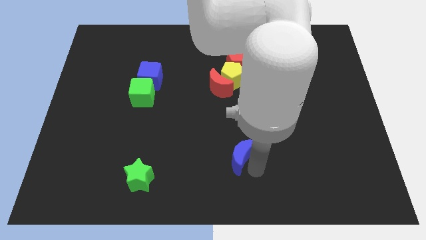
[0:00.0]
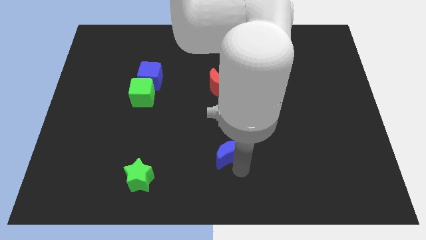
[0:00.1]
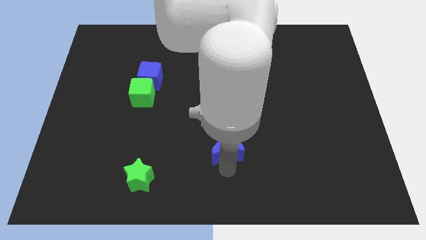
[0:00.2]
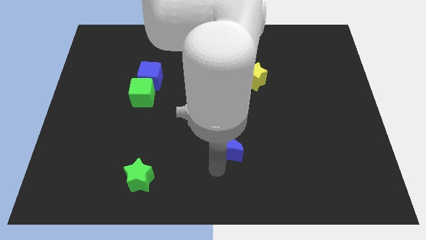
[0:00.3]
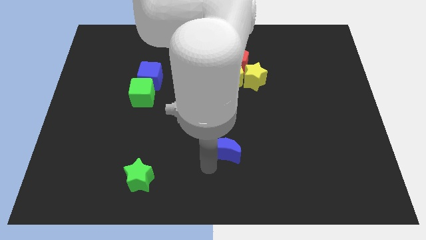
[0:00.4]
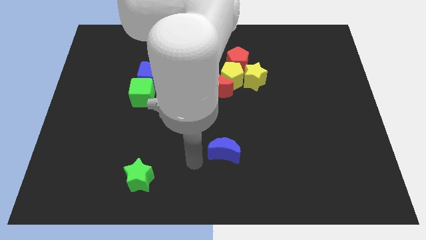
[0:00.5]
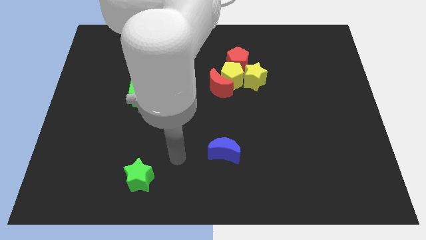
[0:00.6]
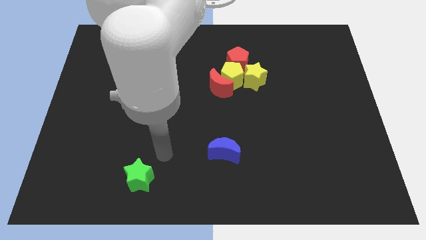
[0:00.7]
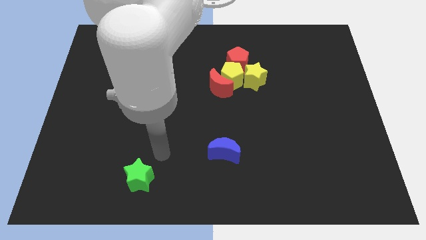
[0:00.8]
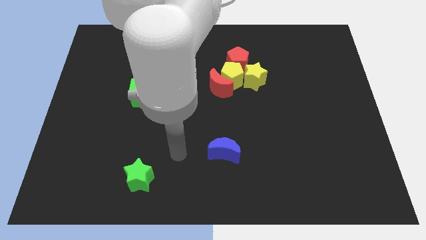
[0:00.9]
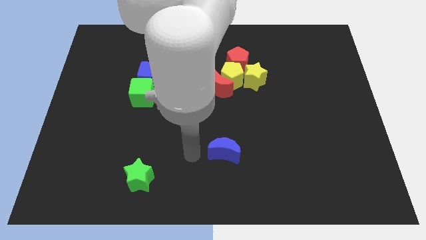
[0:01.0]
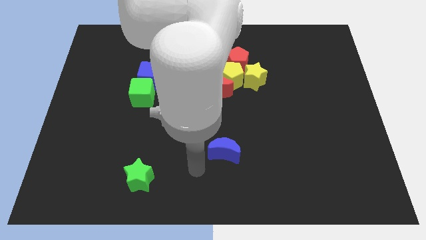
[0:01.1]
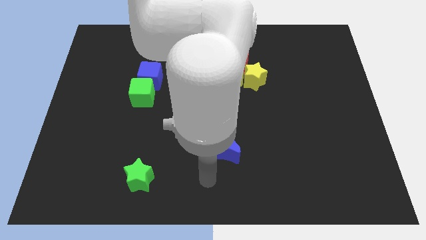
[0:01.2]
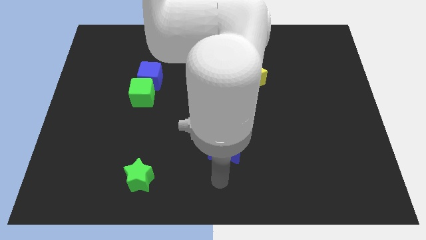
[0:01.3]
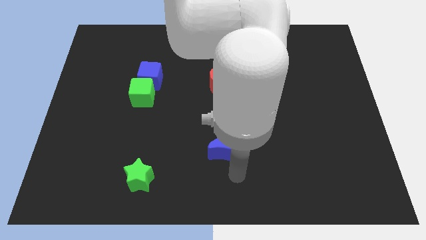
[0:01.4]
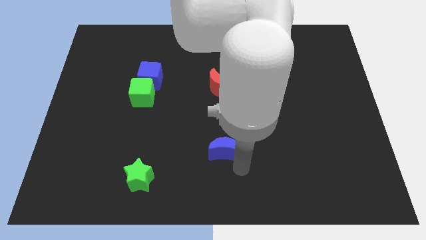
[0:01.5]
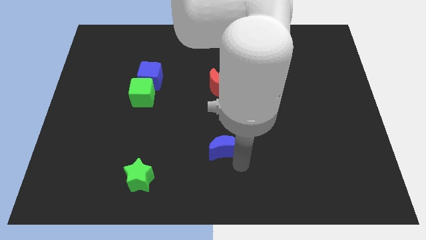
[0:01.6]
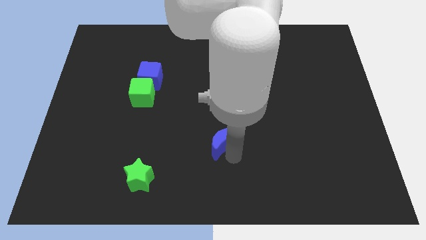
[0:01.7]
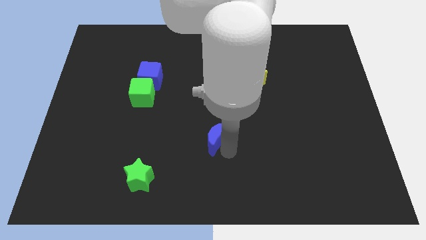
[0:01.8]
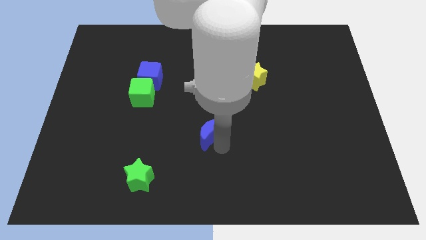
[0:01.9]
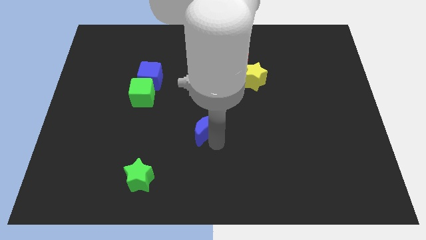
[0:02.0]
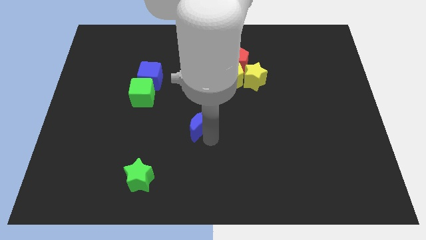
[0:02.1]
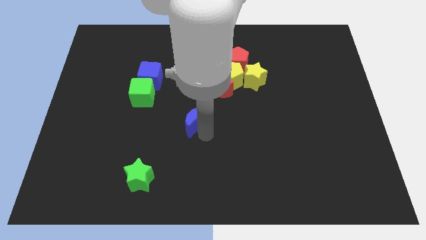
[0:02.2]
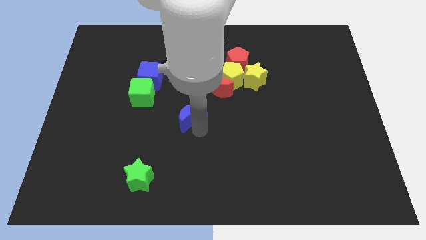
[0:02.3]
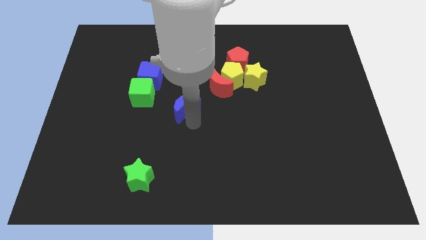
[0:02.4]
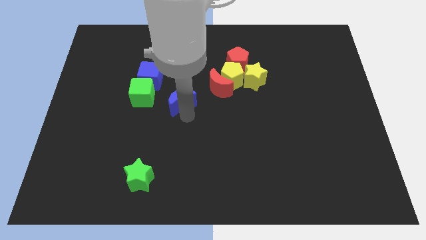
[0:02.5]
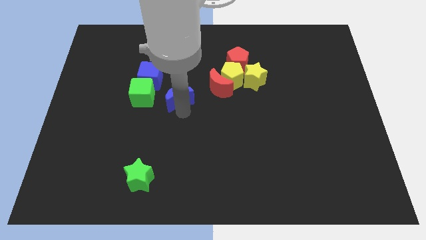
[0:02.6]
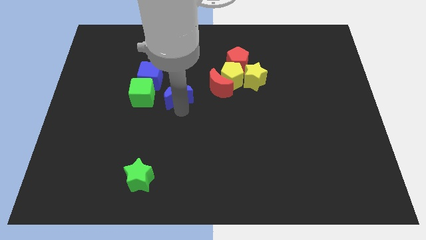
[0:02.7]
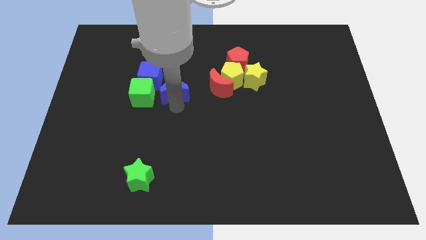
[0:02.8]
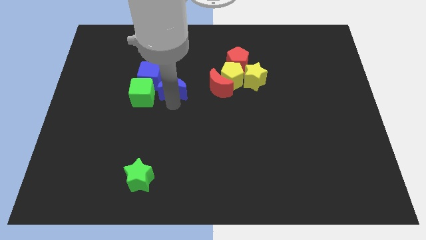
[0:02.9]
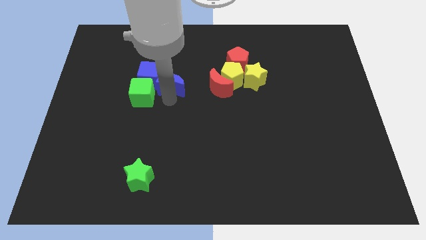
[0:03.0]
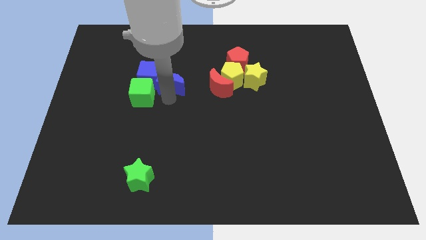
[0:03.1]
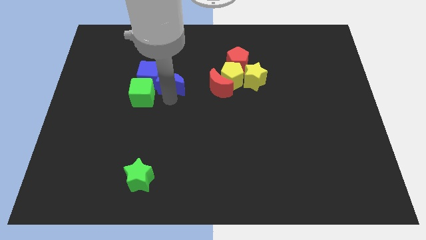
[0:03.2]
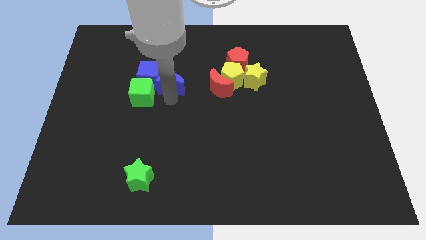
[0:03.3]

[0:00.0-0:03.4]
place the blue moon diagonal to the blue cube

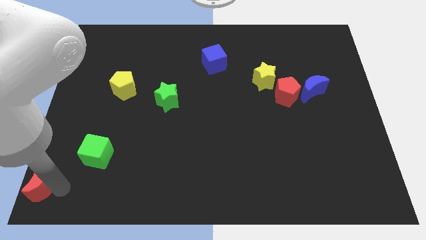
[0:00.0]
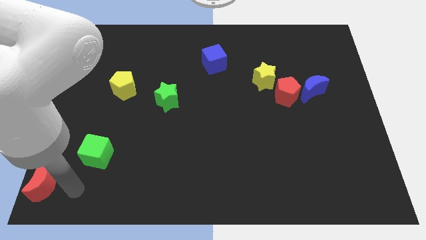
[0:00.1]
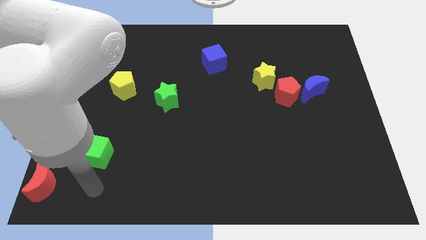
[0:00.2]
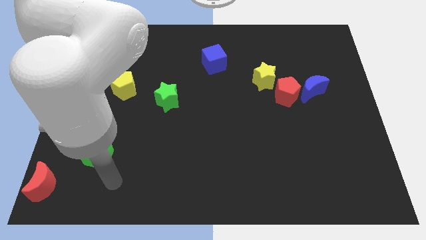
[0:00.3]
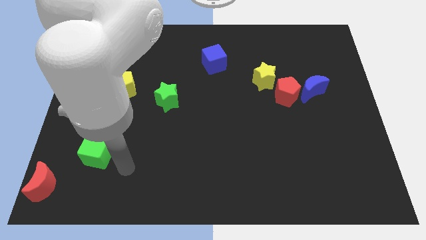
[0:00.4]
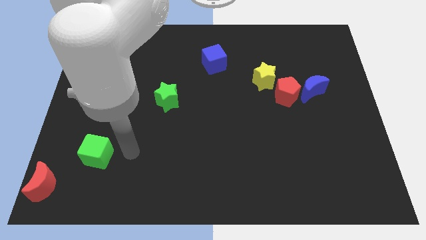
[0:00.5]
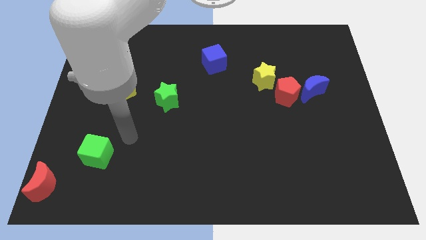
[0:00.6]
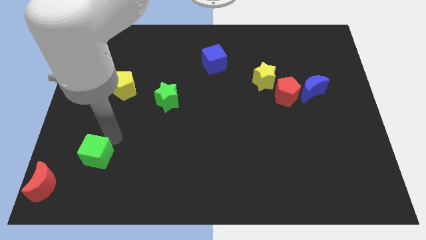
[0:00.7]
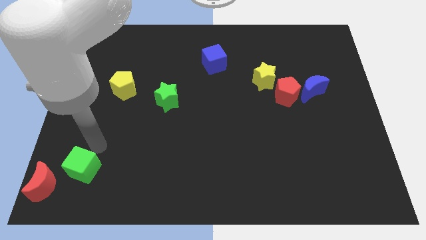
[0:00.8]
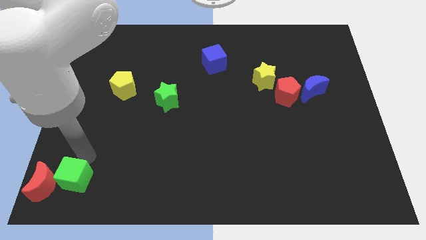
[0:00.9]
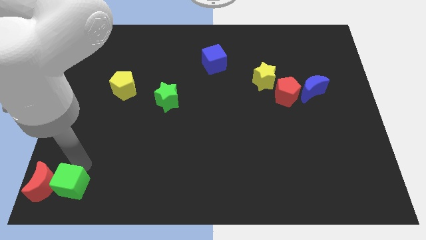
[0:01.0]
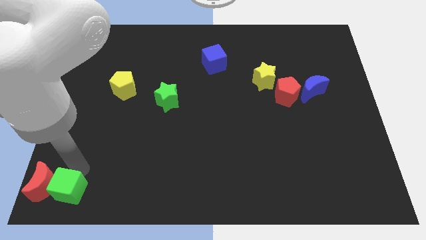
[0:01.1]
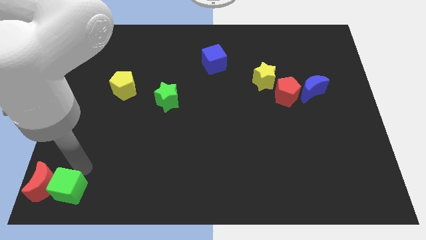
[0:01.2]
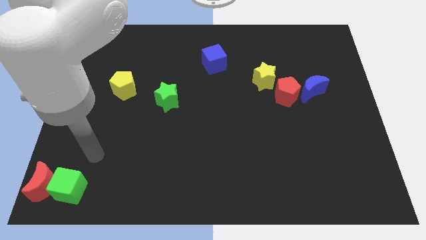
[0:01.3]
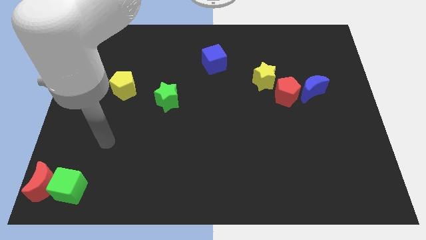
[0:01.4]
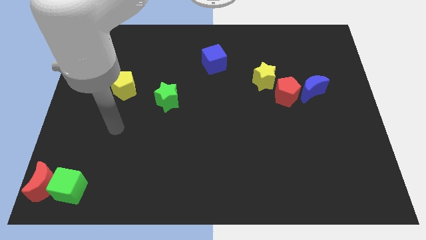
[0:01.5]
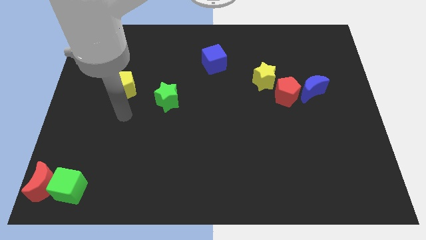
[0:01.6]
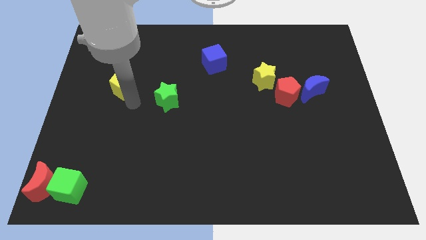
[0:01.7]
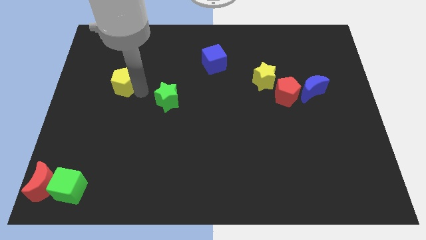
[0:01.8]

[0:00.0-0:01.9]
push the green cube parallel to red crescent

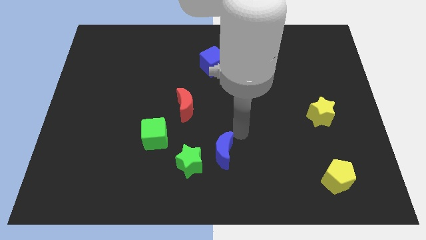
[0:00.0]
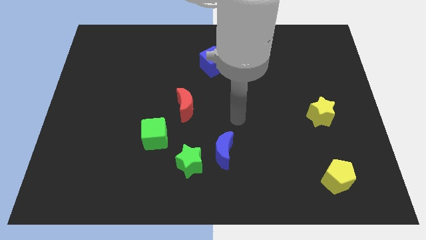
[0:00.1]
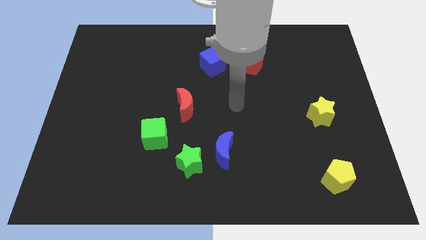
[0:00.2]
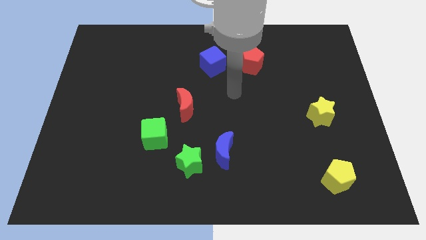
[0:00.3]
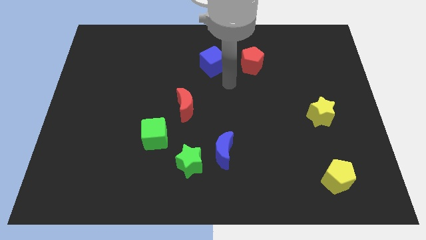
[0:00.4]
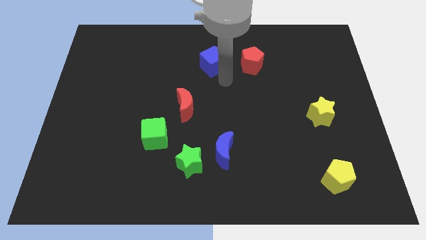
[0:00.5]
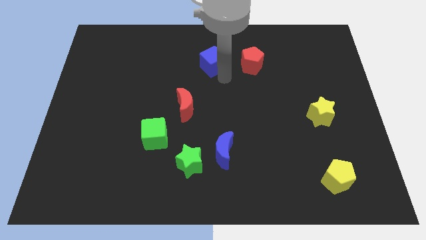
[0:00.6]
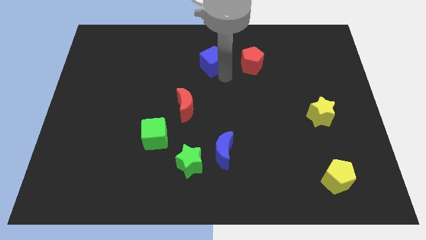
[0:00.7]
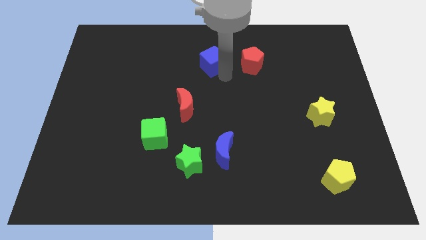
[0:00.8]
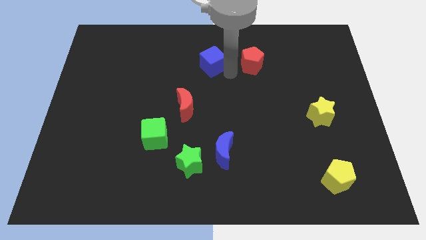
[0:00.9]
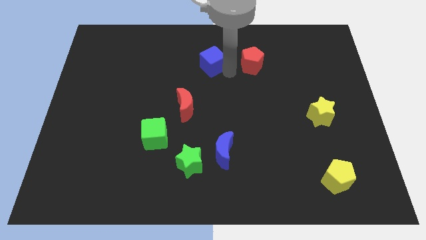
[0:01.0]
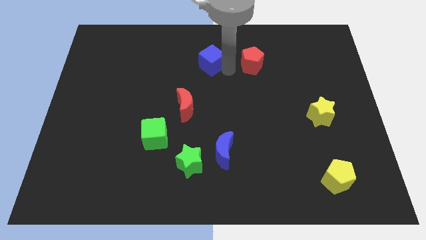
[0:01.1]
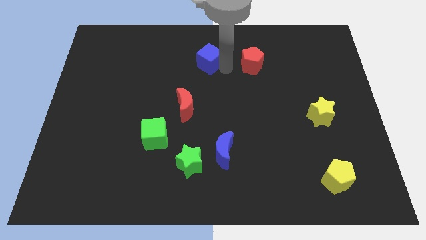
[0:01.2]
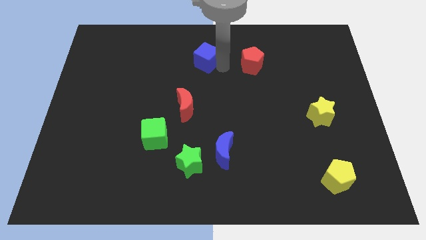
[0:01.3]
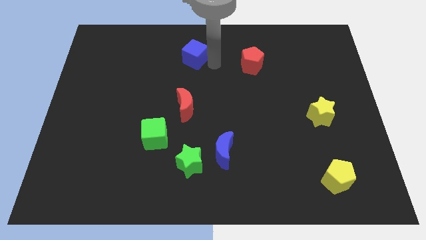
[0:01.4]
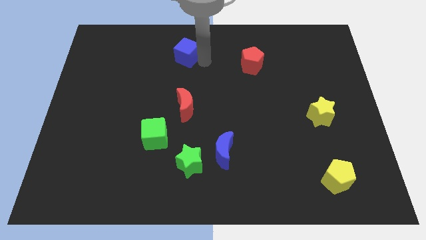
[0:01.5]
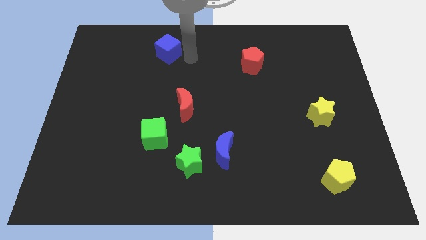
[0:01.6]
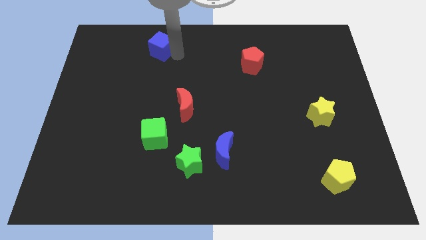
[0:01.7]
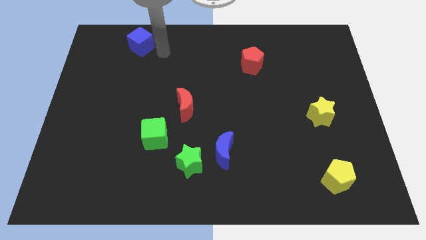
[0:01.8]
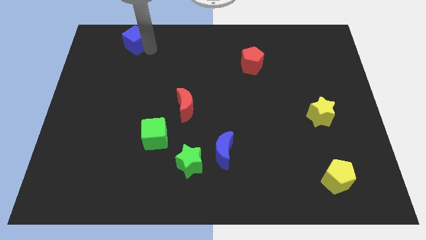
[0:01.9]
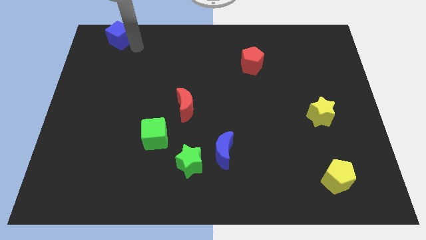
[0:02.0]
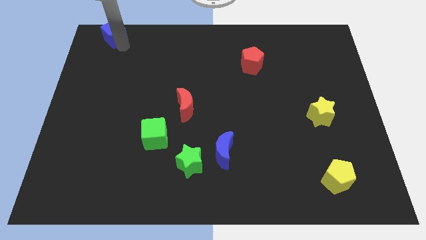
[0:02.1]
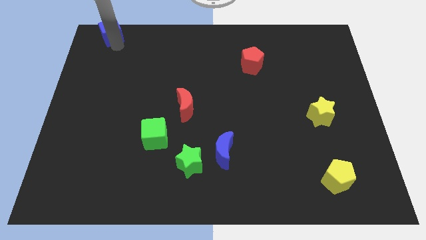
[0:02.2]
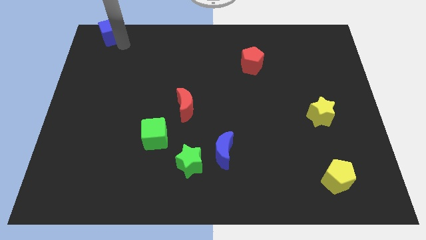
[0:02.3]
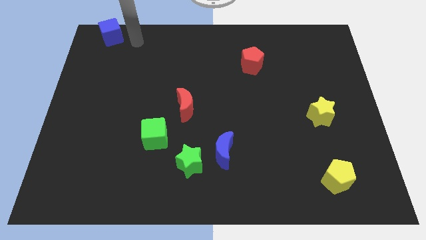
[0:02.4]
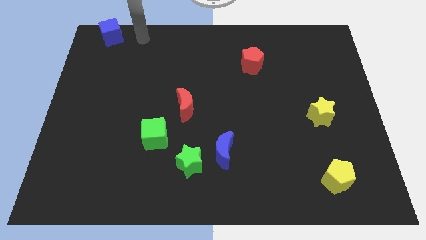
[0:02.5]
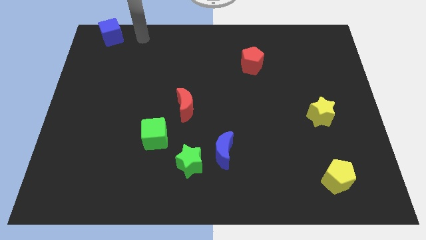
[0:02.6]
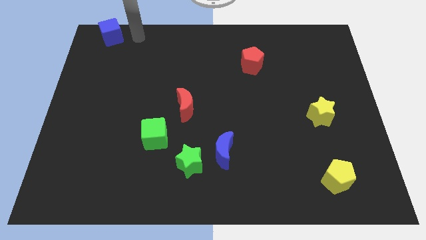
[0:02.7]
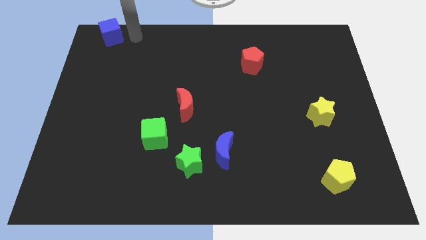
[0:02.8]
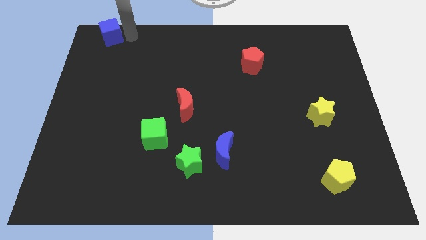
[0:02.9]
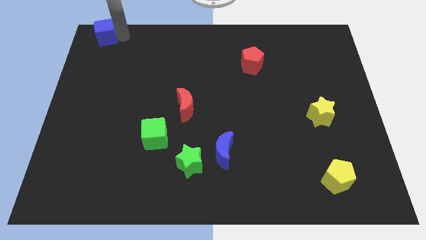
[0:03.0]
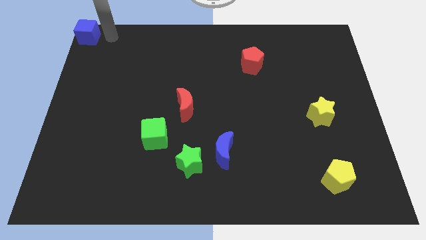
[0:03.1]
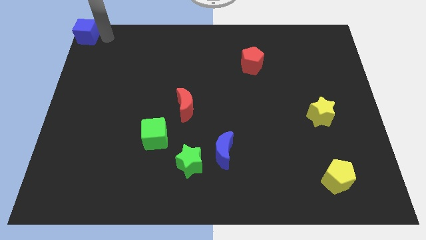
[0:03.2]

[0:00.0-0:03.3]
move the blue cube to the top left corner of the board

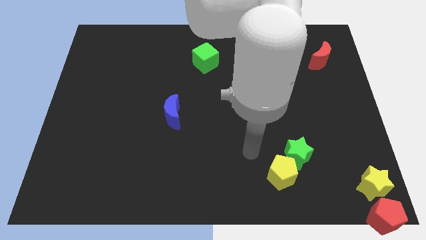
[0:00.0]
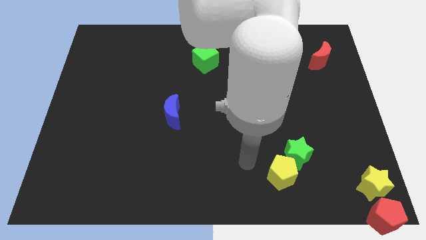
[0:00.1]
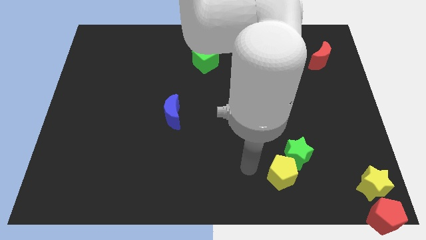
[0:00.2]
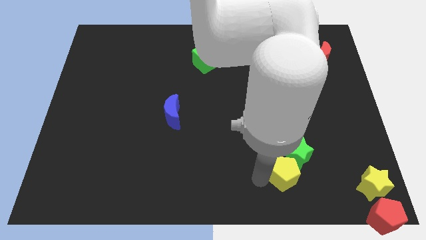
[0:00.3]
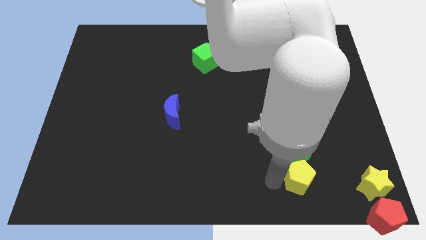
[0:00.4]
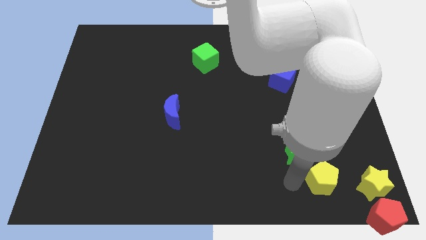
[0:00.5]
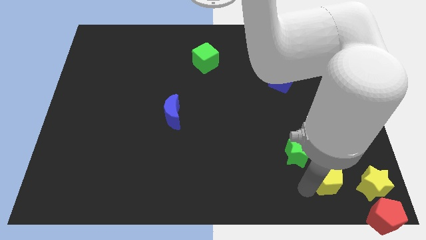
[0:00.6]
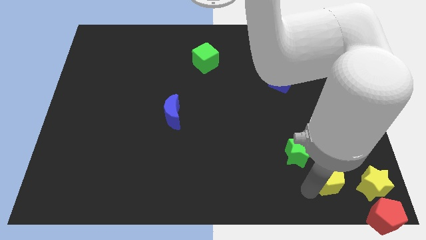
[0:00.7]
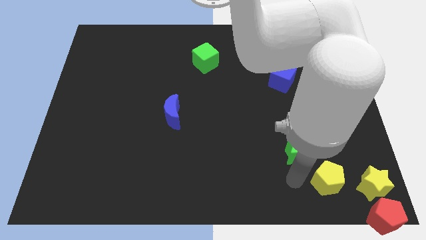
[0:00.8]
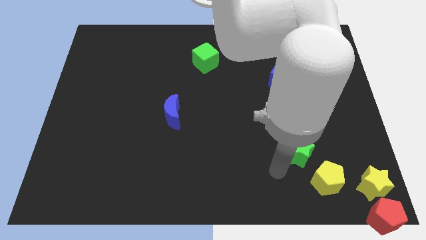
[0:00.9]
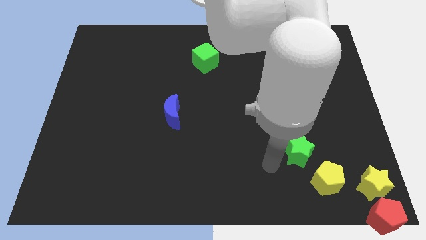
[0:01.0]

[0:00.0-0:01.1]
push the yellow pentagon towards the yellow star
